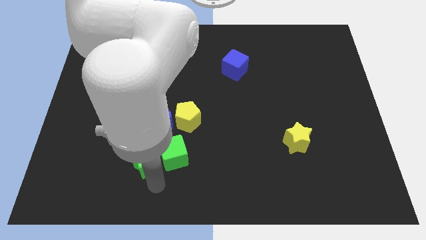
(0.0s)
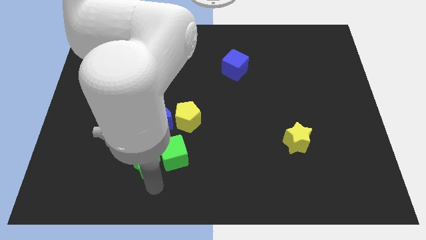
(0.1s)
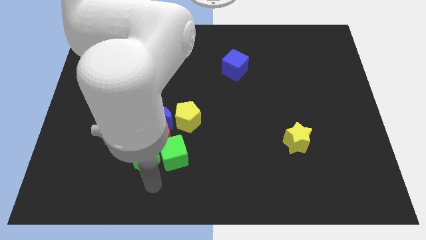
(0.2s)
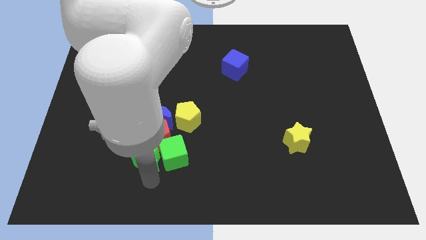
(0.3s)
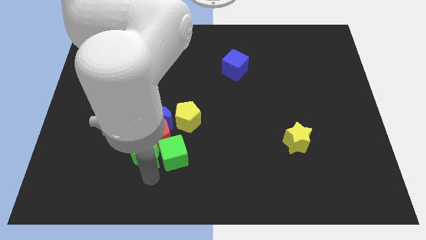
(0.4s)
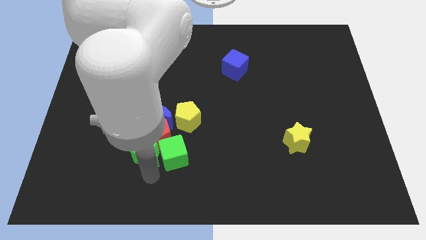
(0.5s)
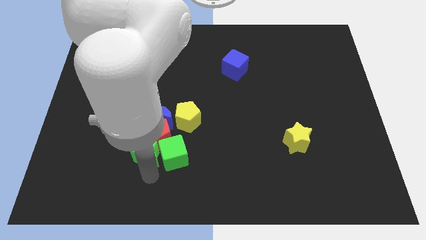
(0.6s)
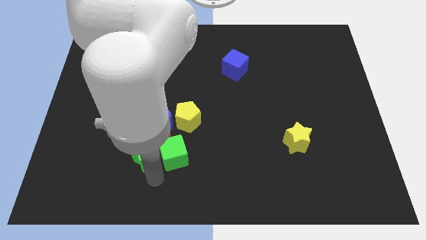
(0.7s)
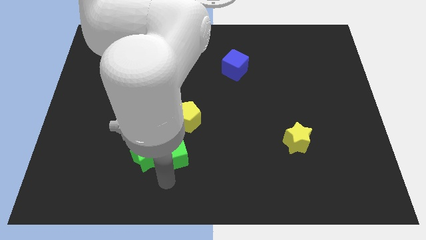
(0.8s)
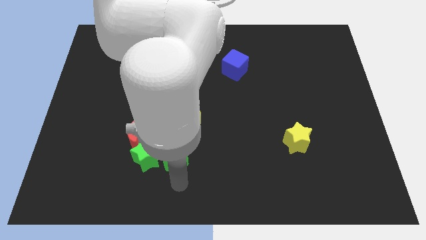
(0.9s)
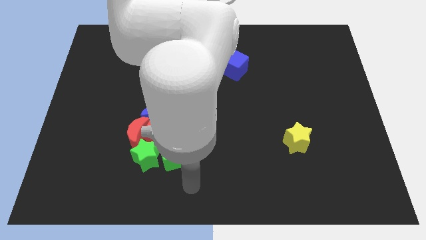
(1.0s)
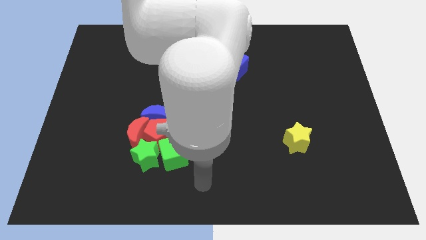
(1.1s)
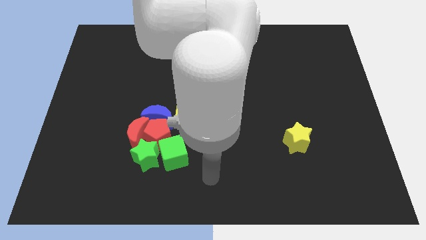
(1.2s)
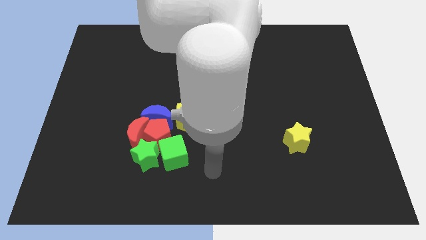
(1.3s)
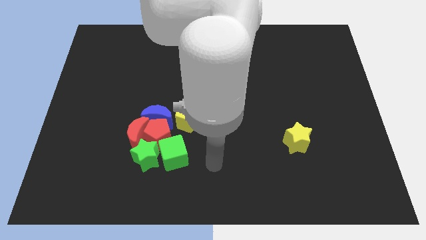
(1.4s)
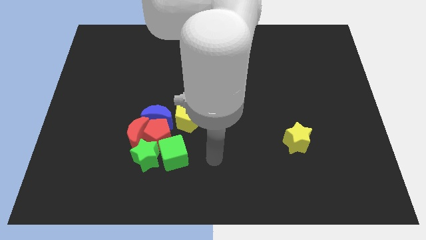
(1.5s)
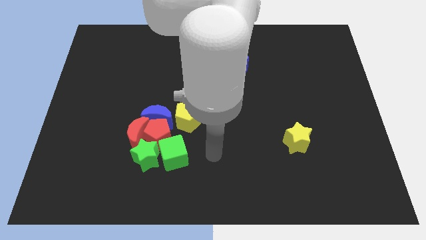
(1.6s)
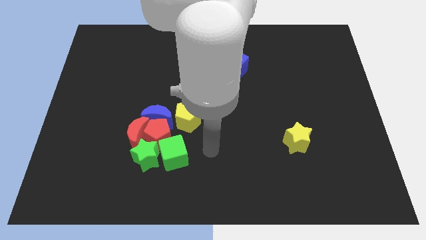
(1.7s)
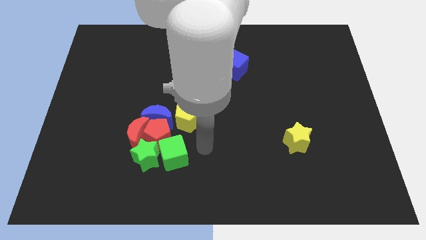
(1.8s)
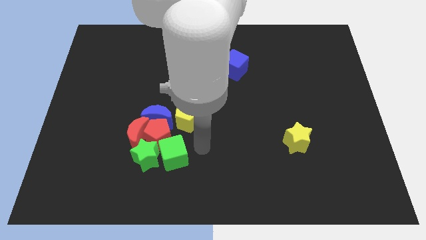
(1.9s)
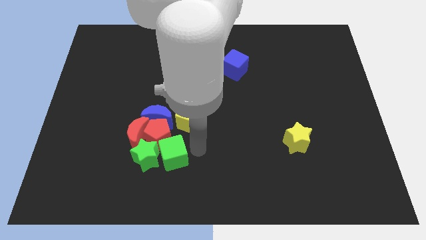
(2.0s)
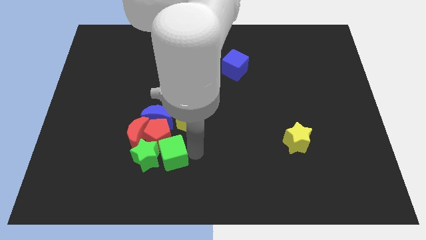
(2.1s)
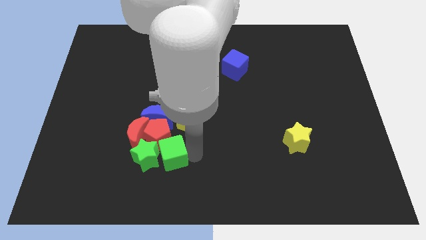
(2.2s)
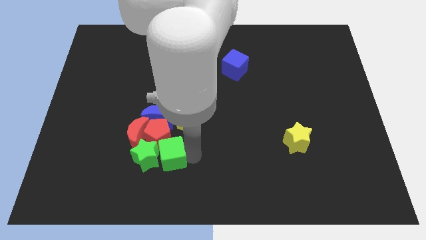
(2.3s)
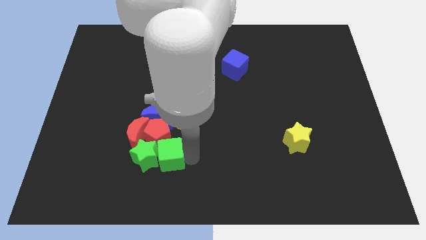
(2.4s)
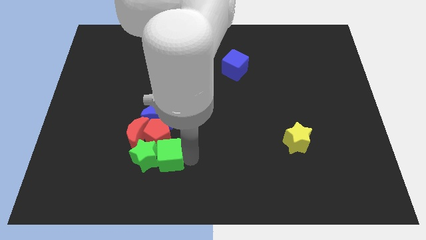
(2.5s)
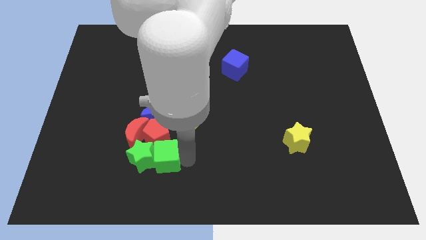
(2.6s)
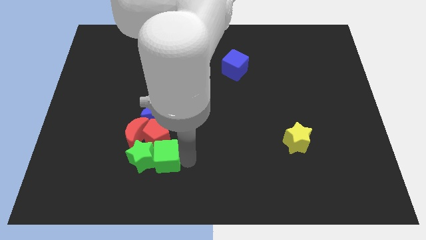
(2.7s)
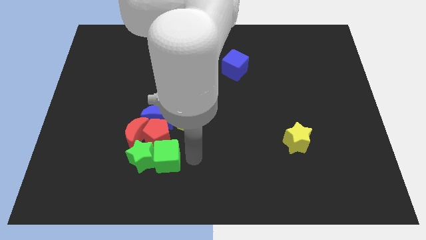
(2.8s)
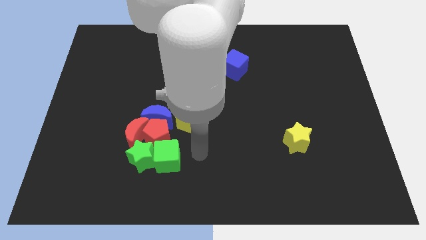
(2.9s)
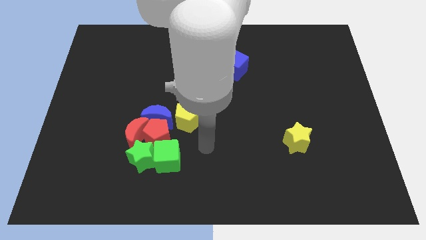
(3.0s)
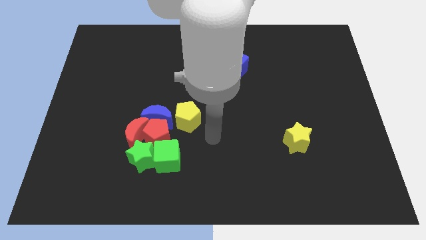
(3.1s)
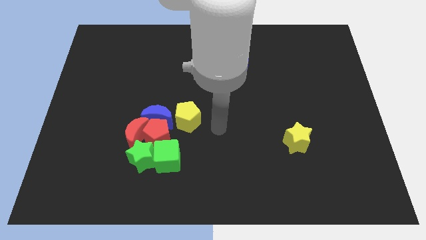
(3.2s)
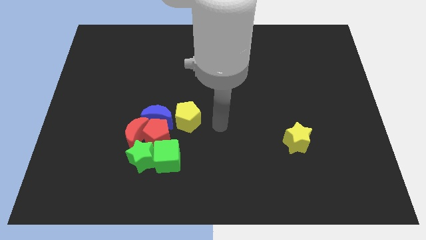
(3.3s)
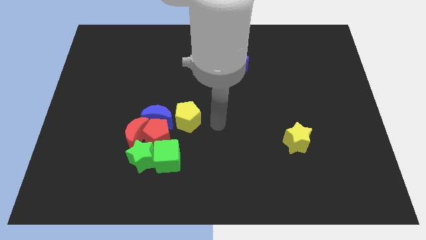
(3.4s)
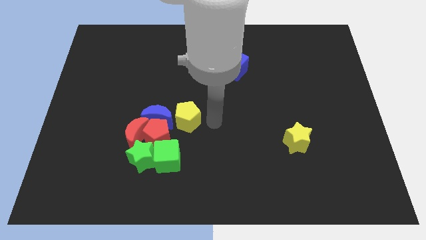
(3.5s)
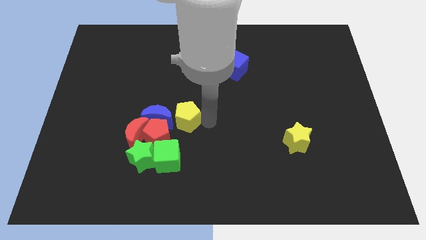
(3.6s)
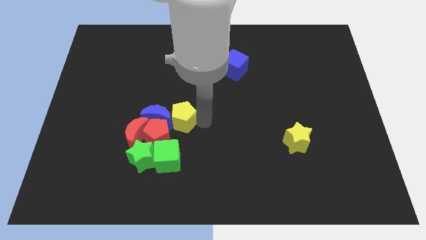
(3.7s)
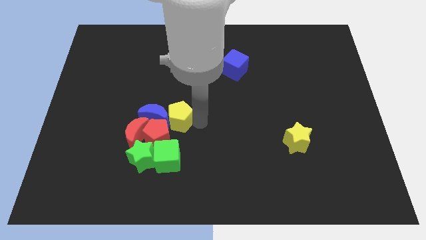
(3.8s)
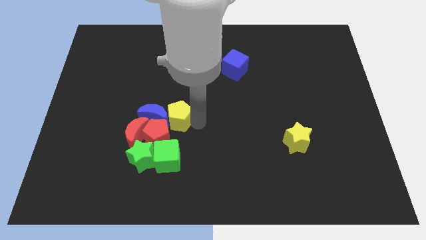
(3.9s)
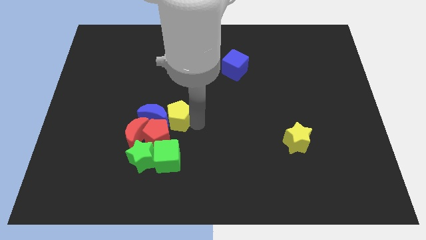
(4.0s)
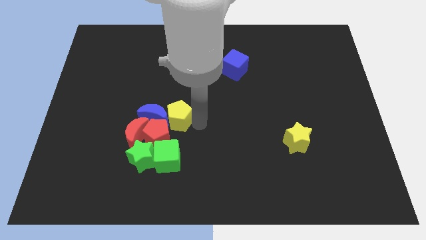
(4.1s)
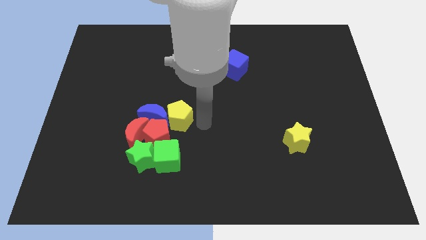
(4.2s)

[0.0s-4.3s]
push the green cube into the green star

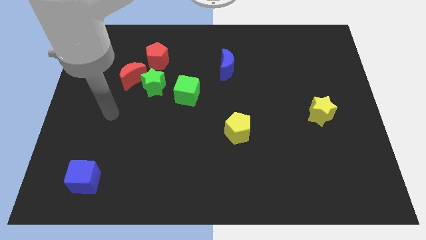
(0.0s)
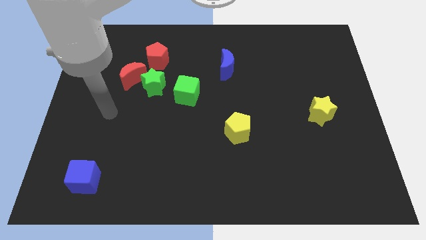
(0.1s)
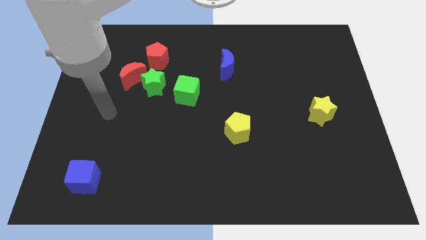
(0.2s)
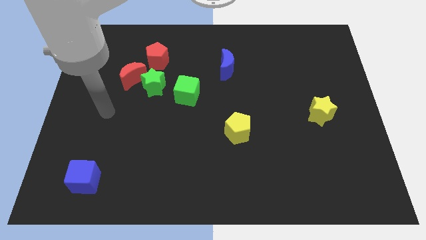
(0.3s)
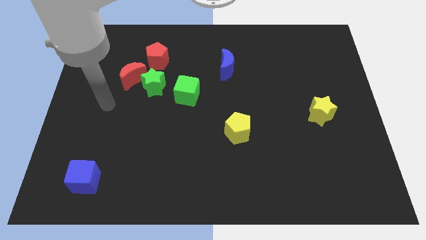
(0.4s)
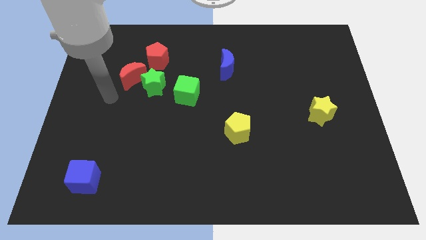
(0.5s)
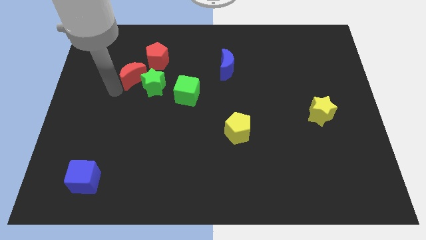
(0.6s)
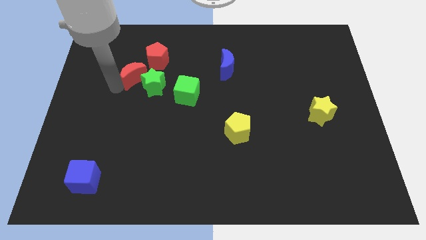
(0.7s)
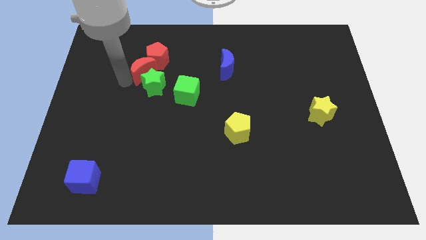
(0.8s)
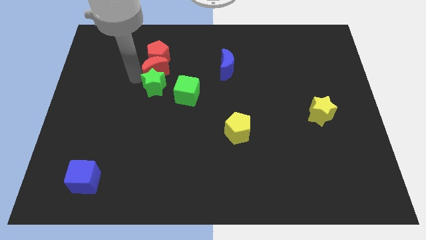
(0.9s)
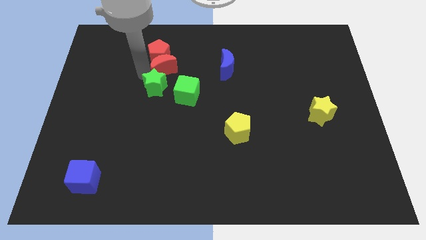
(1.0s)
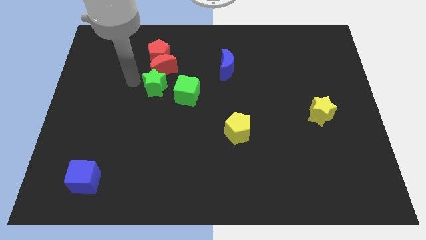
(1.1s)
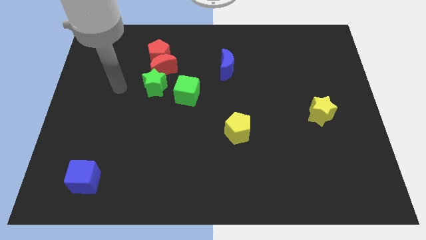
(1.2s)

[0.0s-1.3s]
separate the red pentagon and green star with the red moon

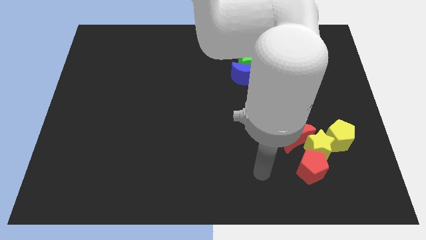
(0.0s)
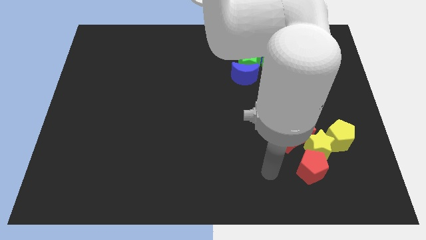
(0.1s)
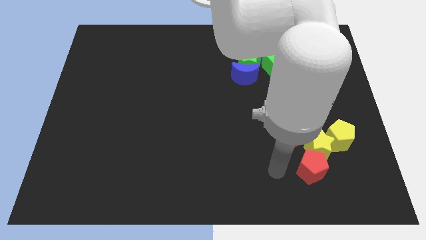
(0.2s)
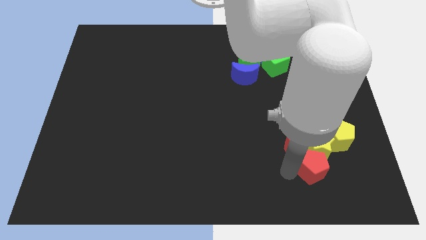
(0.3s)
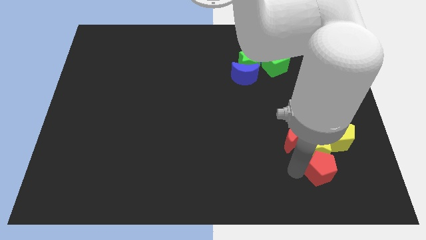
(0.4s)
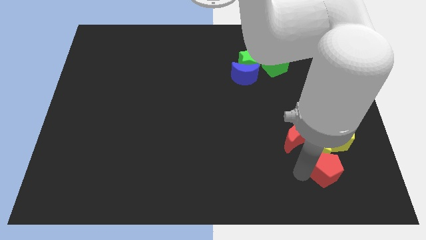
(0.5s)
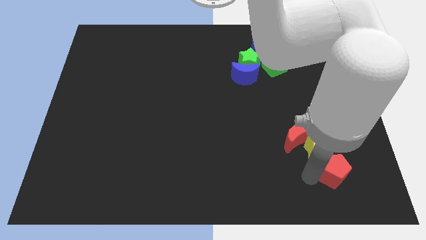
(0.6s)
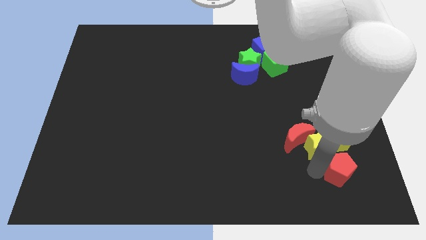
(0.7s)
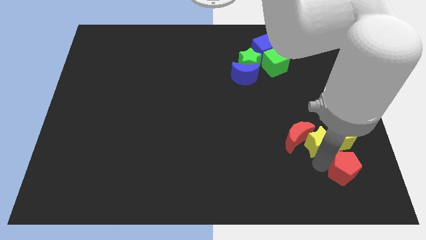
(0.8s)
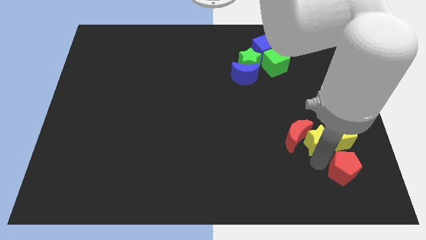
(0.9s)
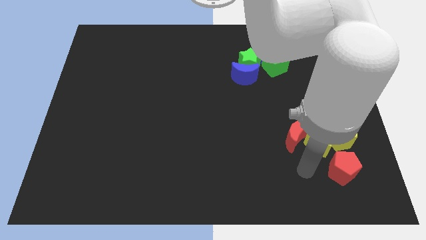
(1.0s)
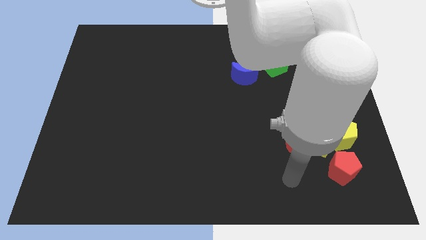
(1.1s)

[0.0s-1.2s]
place red pentagon below yellow pentagon

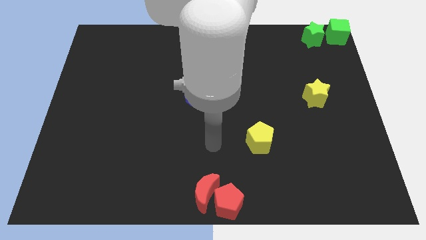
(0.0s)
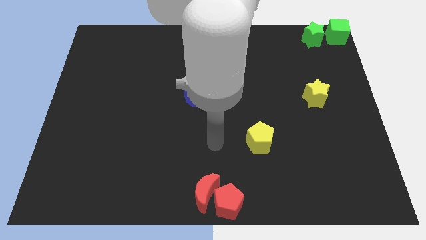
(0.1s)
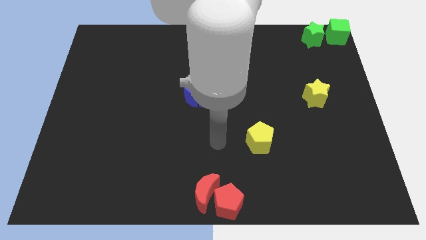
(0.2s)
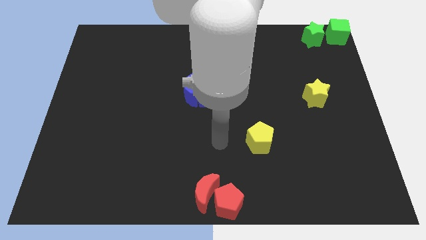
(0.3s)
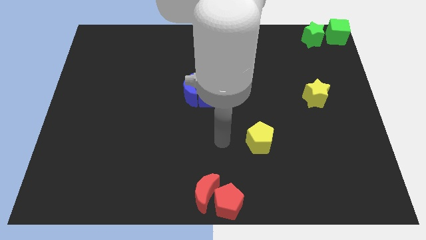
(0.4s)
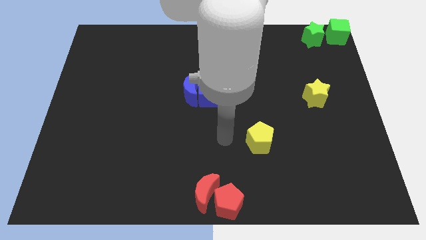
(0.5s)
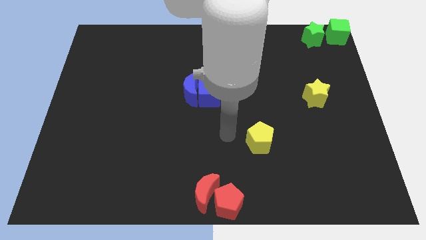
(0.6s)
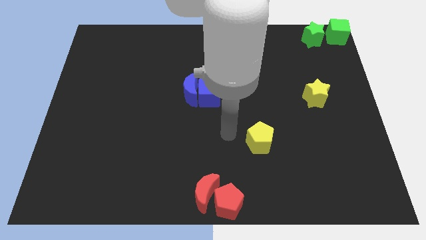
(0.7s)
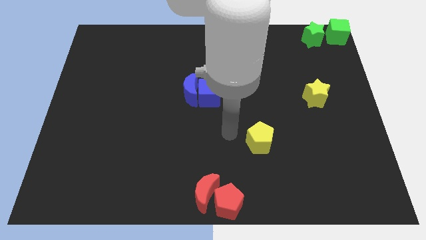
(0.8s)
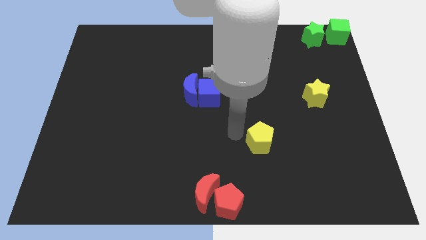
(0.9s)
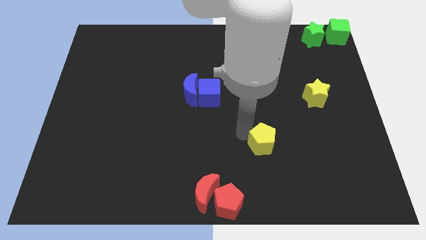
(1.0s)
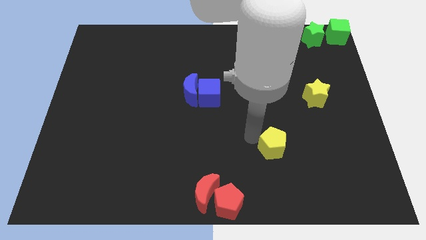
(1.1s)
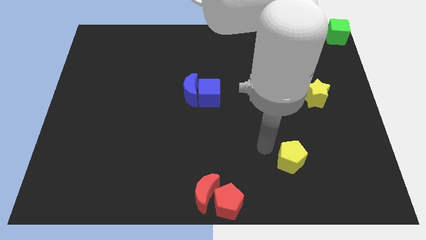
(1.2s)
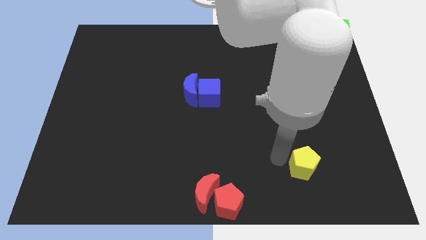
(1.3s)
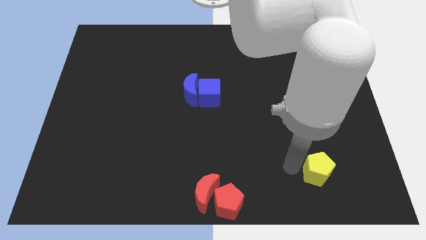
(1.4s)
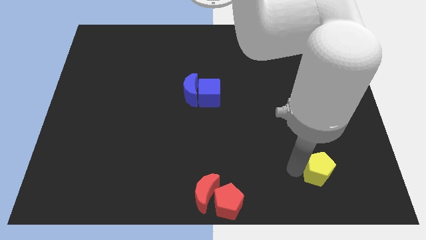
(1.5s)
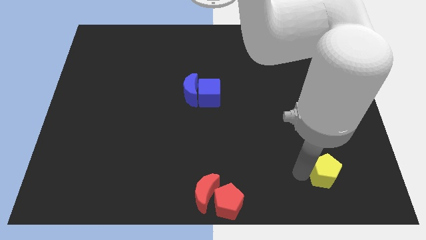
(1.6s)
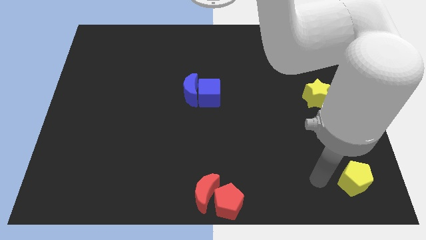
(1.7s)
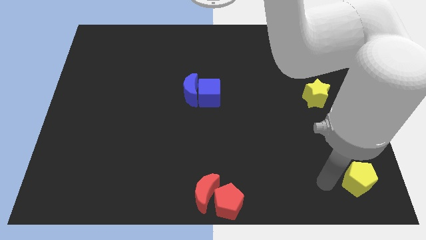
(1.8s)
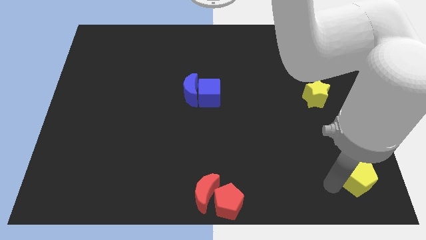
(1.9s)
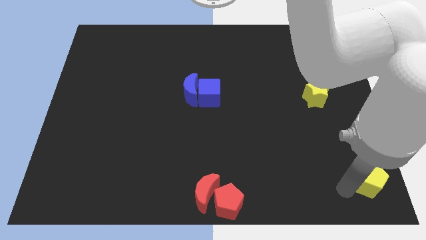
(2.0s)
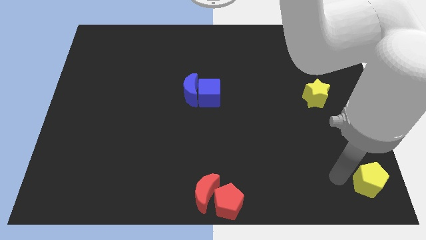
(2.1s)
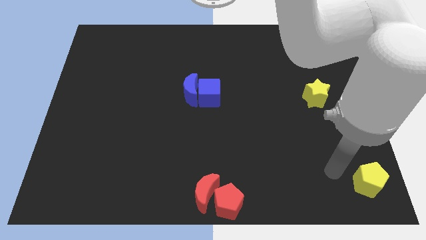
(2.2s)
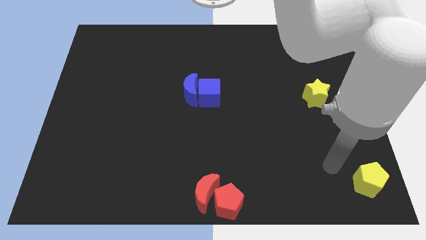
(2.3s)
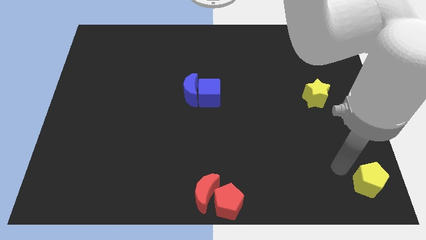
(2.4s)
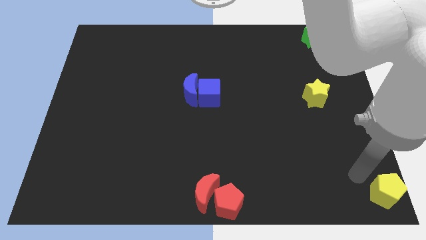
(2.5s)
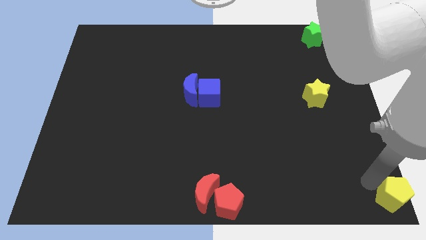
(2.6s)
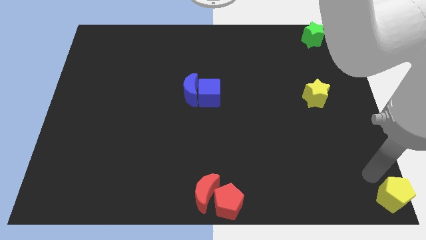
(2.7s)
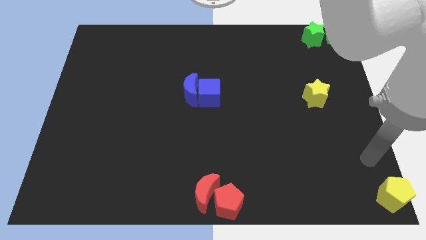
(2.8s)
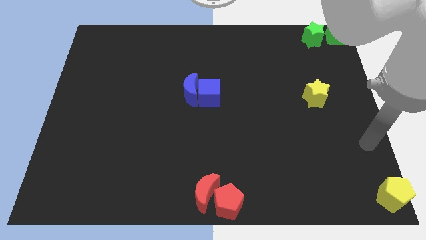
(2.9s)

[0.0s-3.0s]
push the yellow pentagon to the bottom right corner of the board
